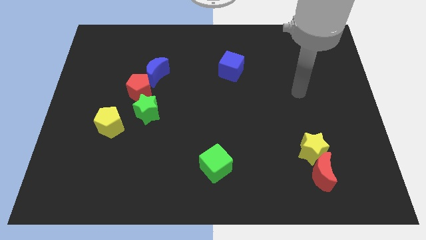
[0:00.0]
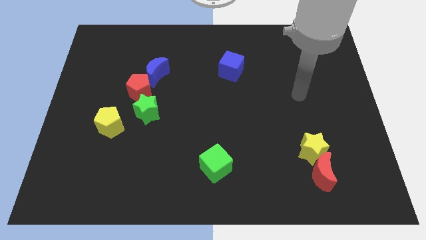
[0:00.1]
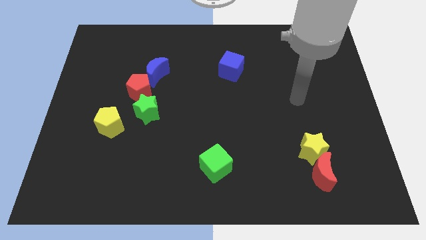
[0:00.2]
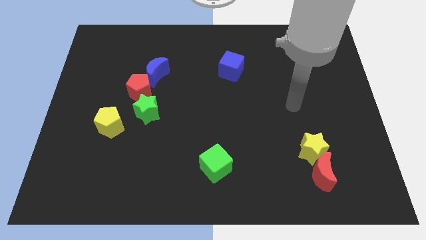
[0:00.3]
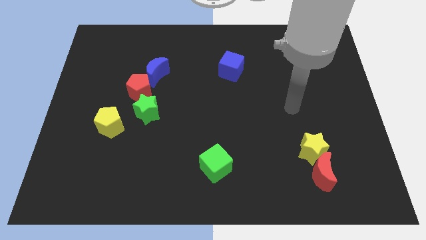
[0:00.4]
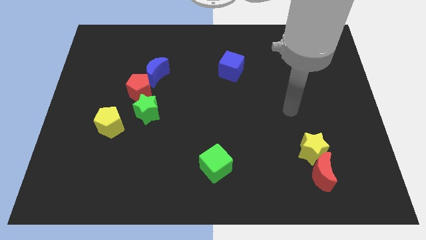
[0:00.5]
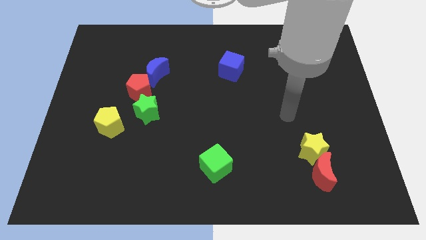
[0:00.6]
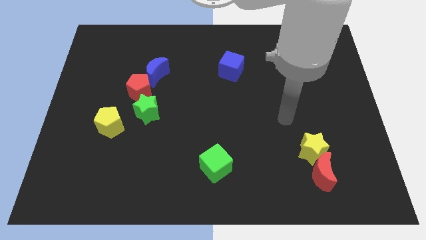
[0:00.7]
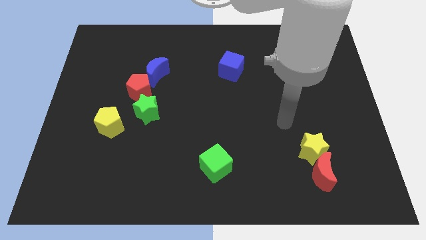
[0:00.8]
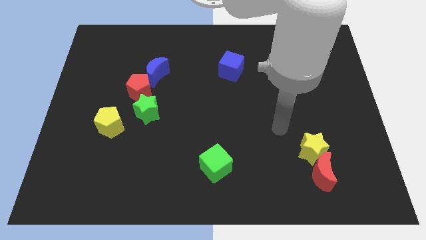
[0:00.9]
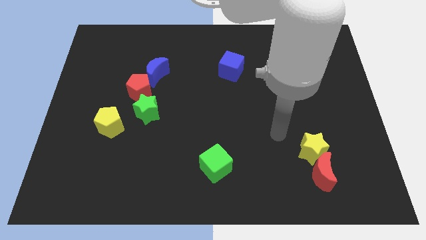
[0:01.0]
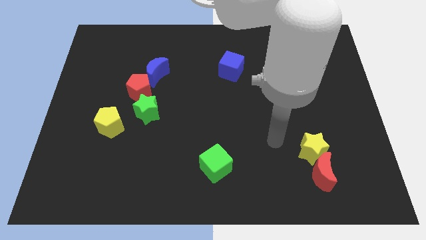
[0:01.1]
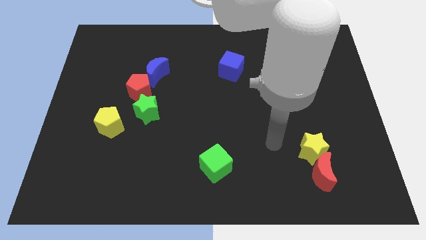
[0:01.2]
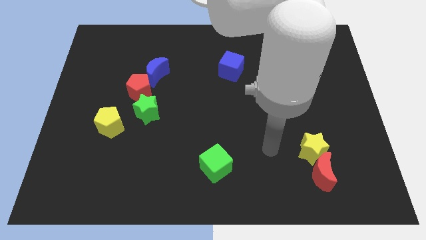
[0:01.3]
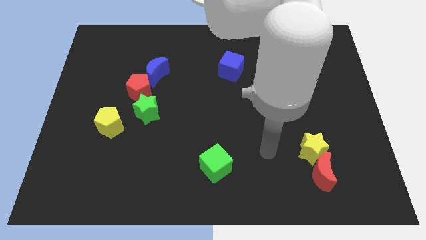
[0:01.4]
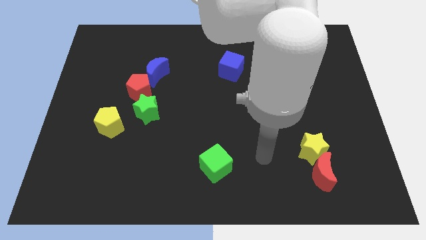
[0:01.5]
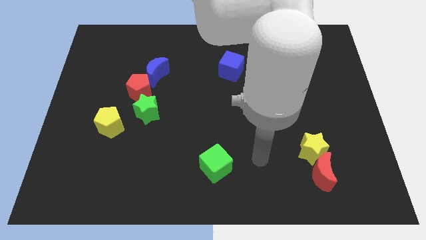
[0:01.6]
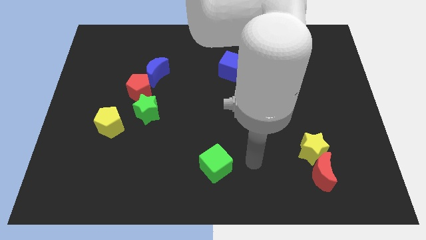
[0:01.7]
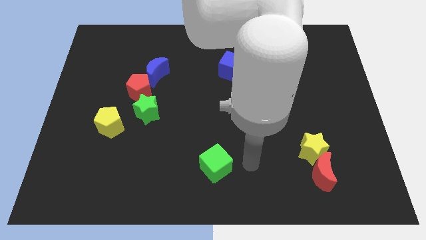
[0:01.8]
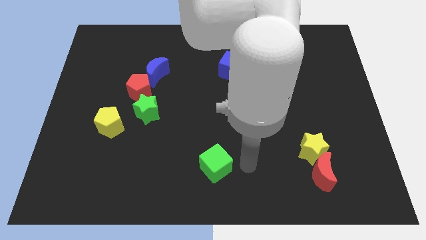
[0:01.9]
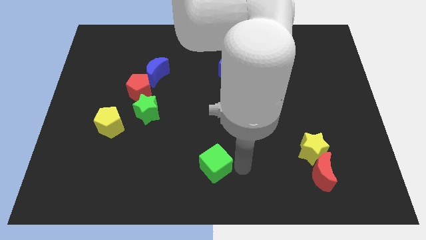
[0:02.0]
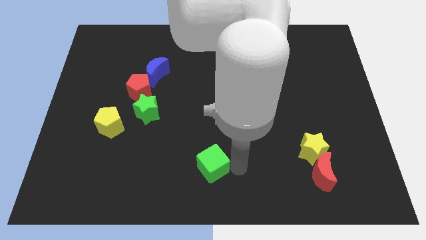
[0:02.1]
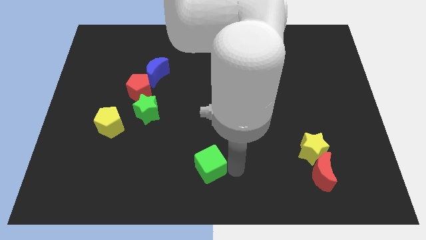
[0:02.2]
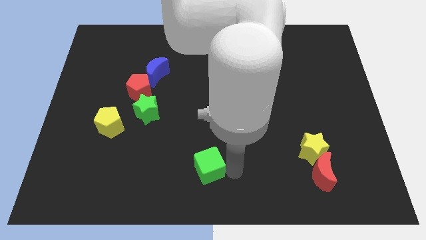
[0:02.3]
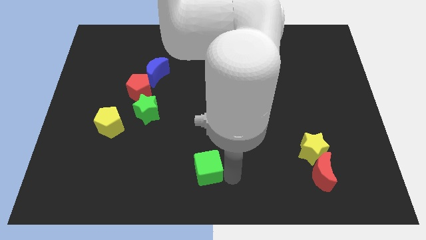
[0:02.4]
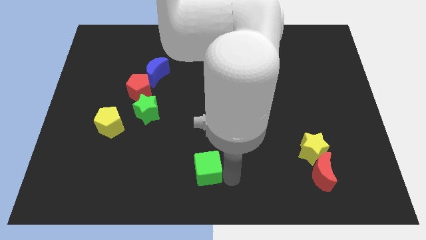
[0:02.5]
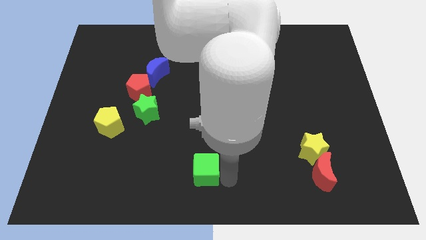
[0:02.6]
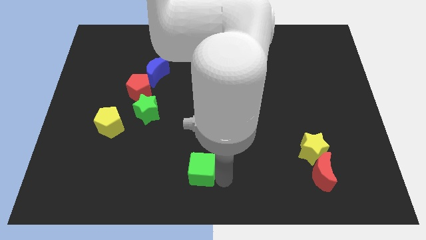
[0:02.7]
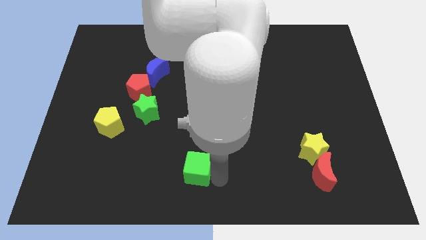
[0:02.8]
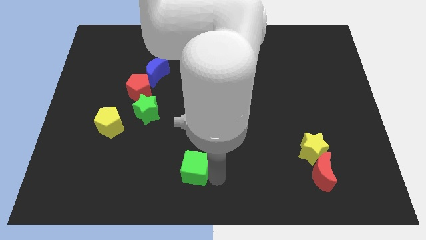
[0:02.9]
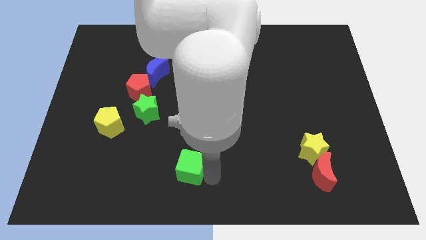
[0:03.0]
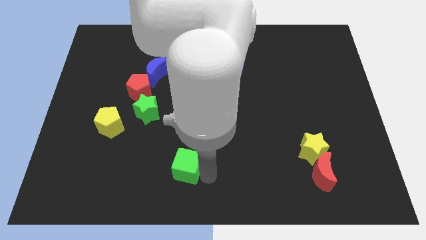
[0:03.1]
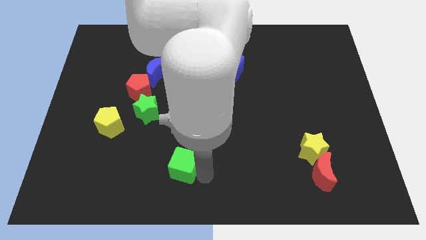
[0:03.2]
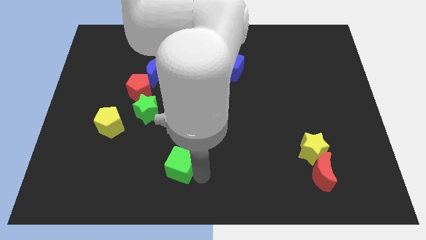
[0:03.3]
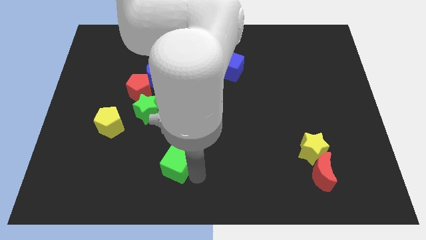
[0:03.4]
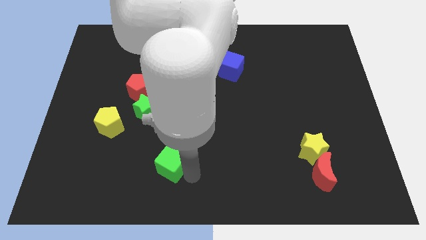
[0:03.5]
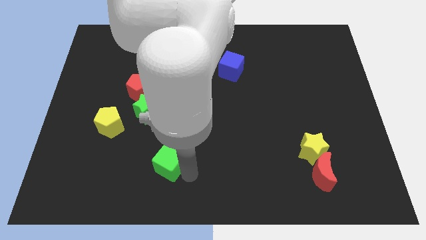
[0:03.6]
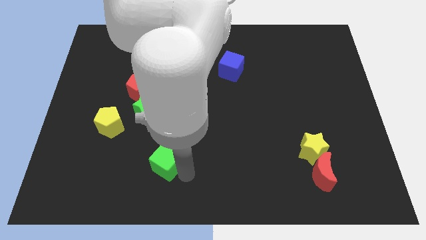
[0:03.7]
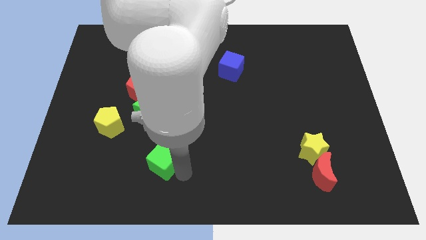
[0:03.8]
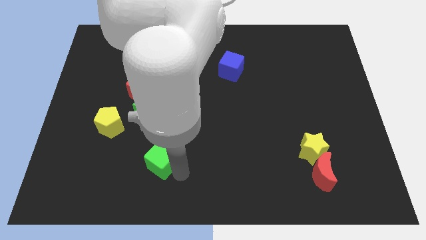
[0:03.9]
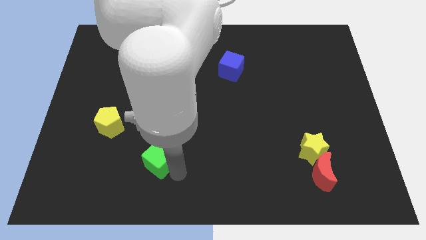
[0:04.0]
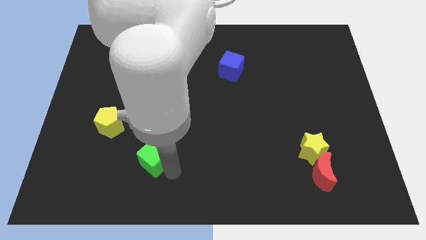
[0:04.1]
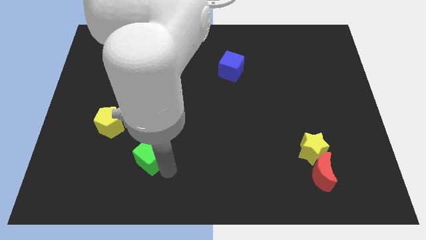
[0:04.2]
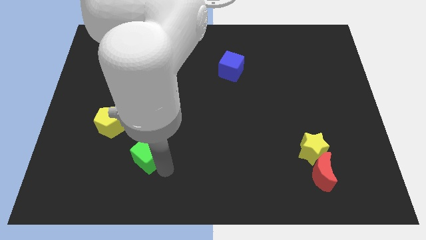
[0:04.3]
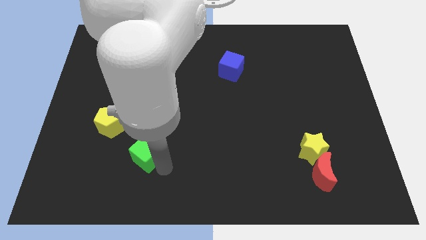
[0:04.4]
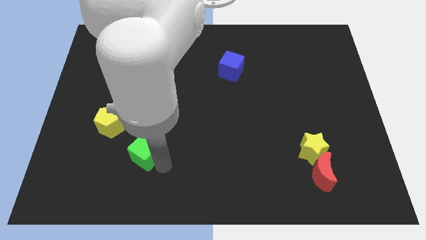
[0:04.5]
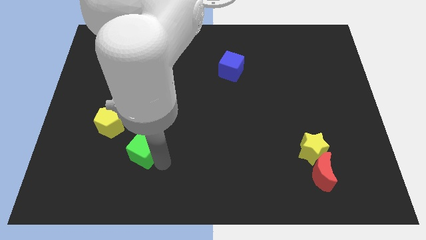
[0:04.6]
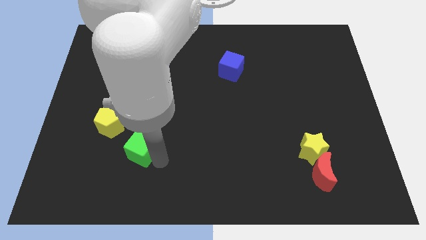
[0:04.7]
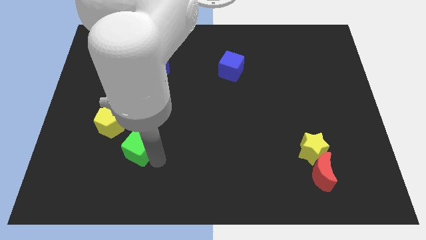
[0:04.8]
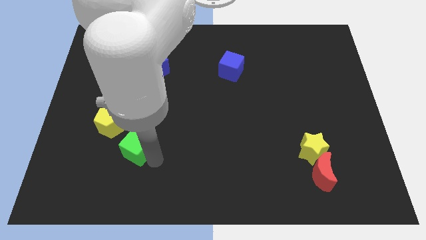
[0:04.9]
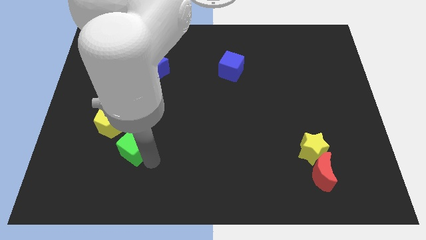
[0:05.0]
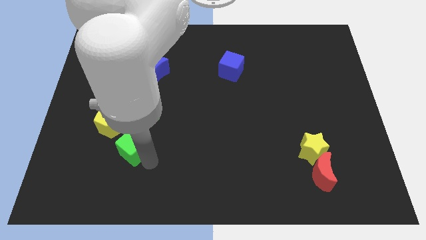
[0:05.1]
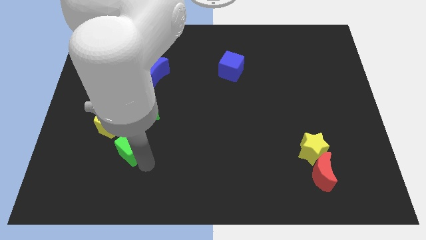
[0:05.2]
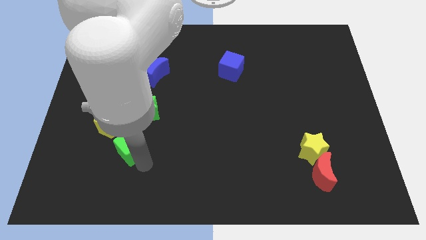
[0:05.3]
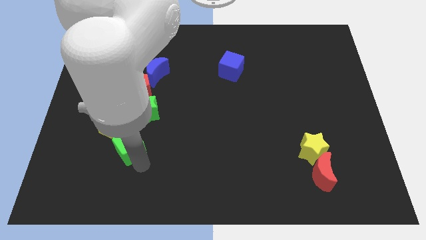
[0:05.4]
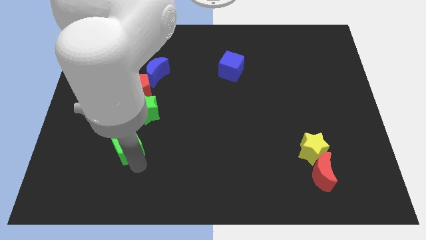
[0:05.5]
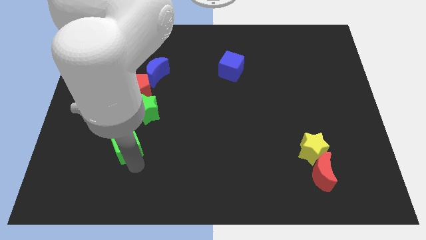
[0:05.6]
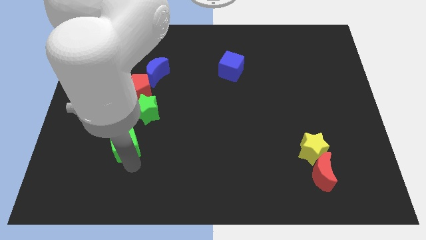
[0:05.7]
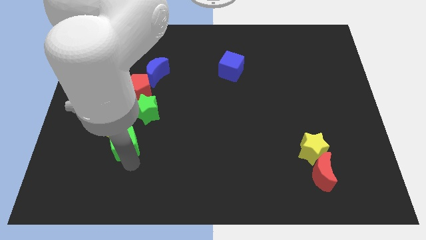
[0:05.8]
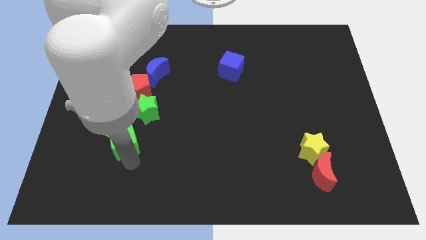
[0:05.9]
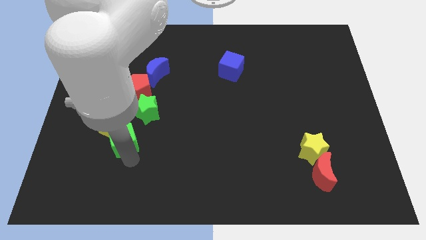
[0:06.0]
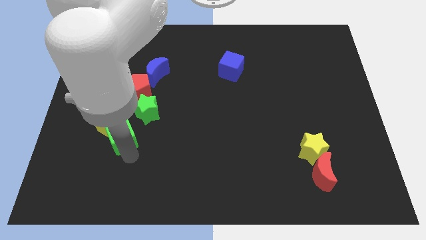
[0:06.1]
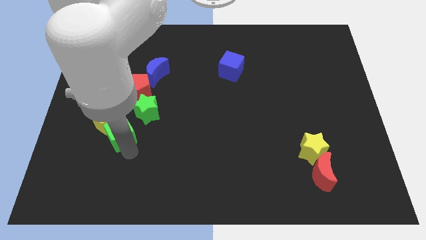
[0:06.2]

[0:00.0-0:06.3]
push the green cube close to the yellow pentagon

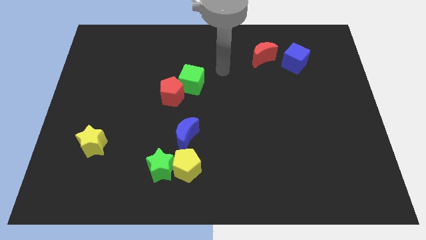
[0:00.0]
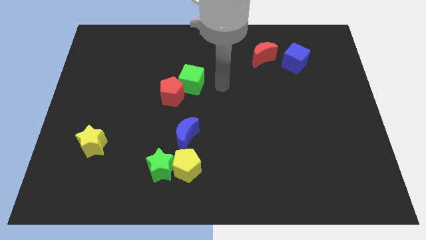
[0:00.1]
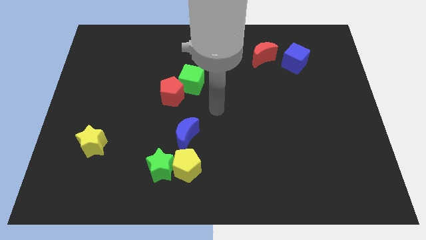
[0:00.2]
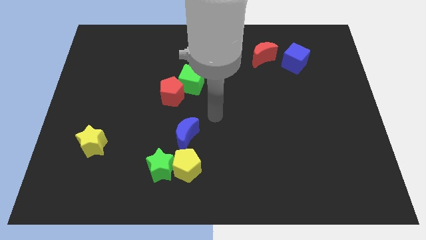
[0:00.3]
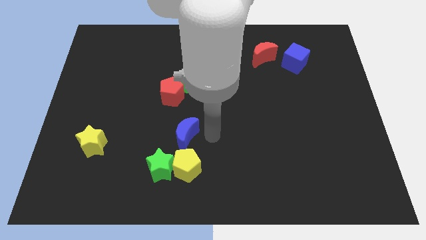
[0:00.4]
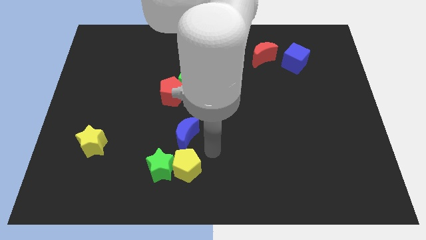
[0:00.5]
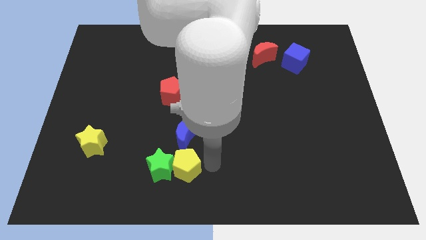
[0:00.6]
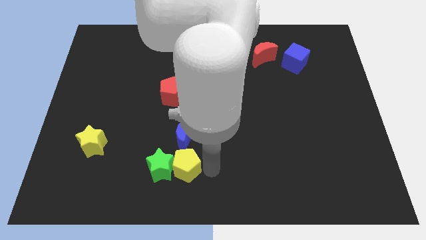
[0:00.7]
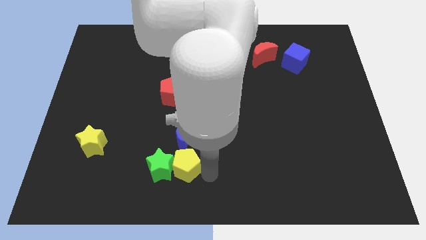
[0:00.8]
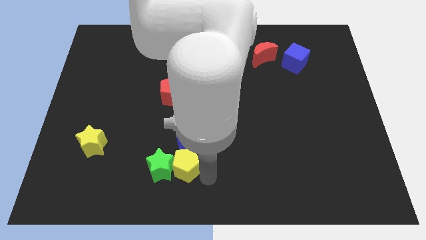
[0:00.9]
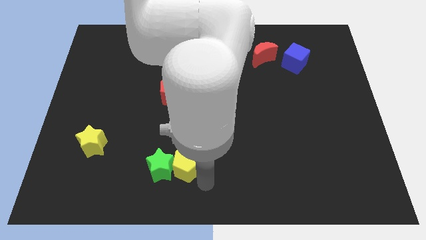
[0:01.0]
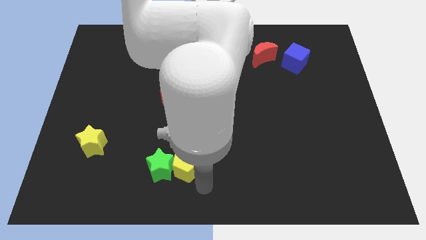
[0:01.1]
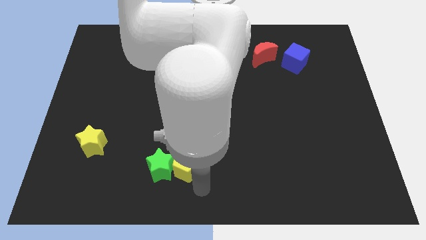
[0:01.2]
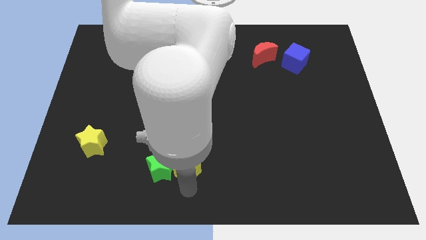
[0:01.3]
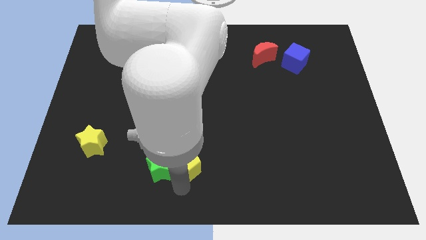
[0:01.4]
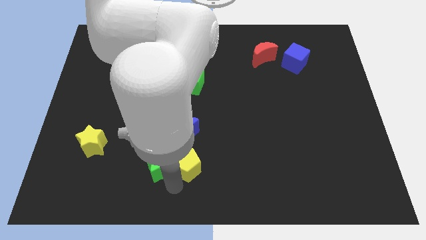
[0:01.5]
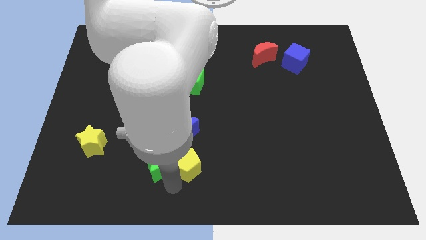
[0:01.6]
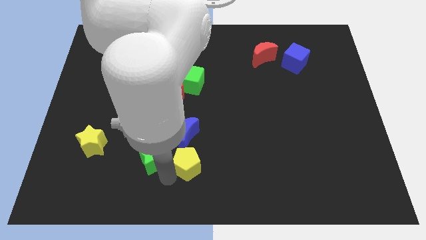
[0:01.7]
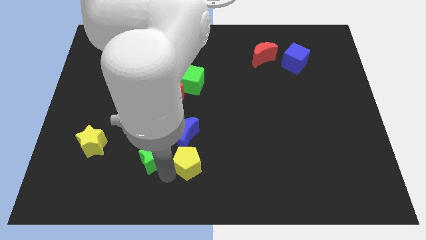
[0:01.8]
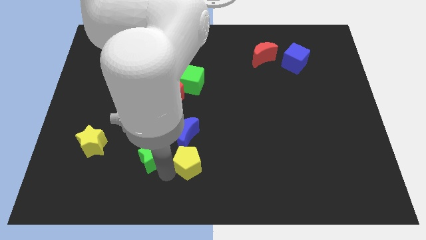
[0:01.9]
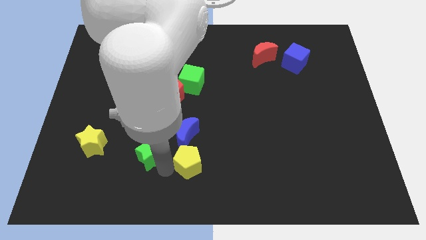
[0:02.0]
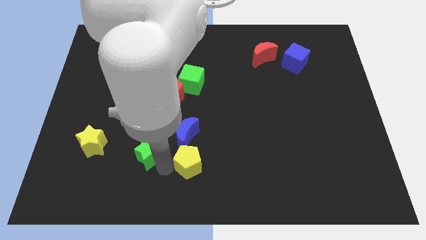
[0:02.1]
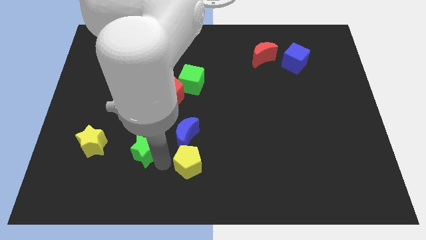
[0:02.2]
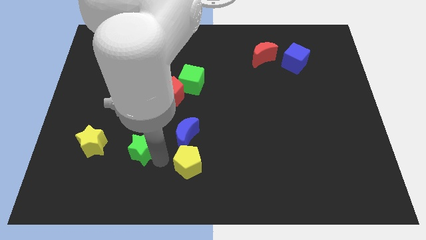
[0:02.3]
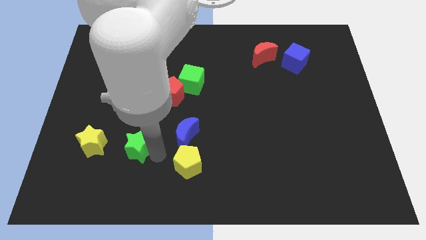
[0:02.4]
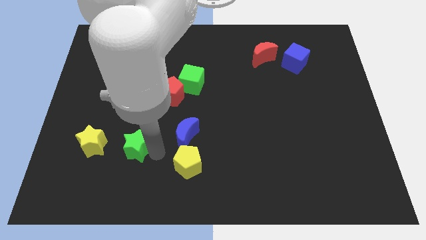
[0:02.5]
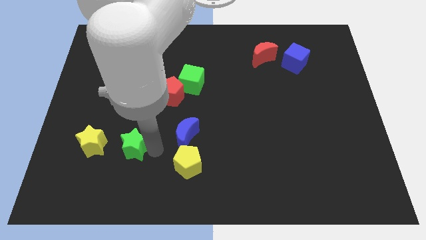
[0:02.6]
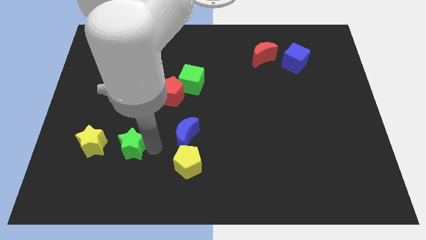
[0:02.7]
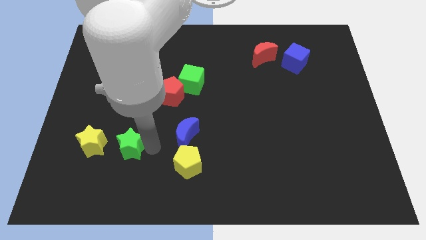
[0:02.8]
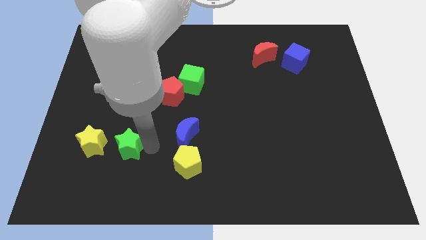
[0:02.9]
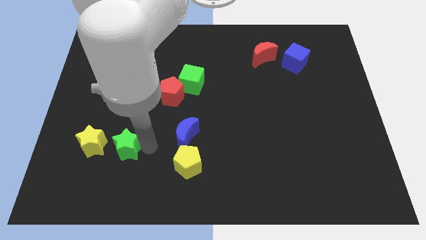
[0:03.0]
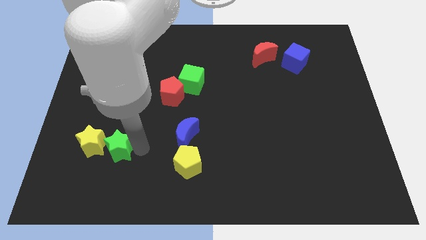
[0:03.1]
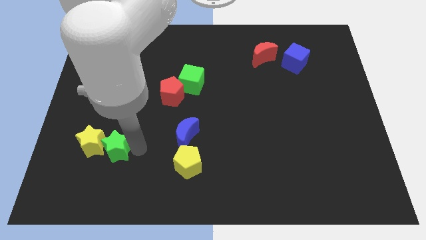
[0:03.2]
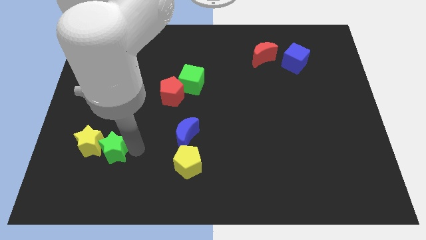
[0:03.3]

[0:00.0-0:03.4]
slide the green star to the yellow star
